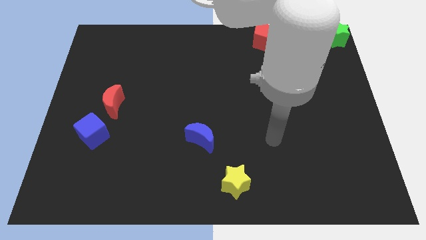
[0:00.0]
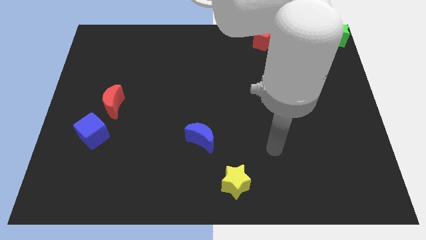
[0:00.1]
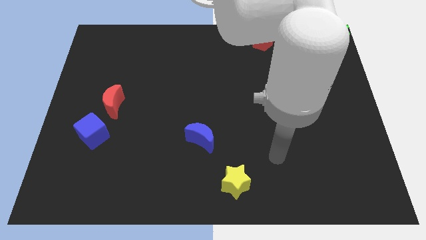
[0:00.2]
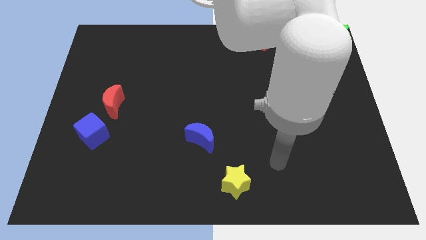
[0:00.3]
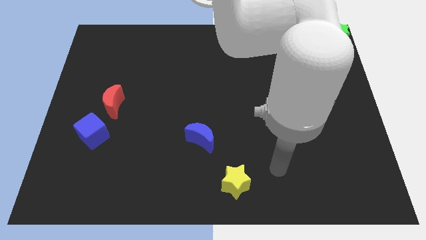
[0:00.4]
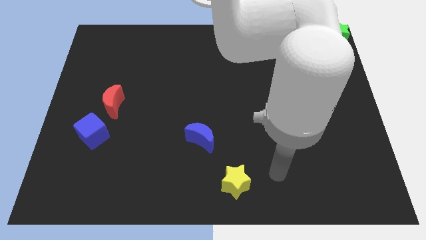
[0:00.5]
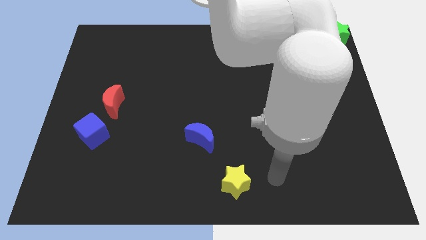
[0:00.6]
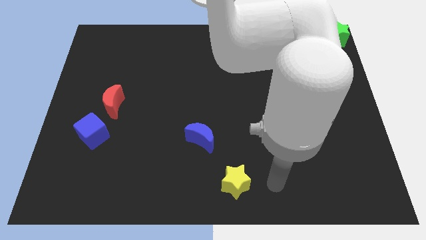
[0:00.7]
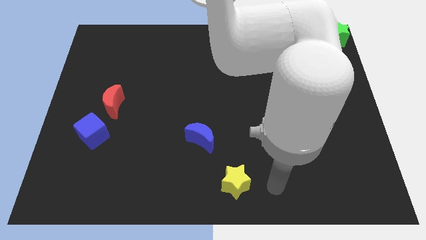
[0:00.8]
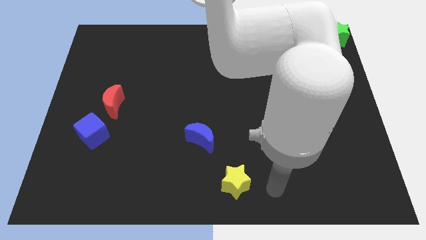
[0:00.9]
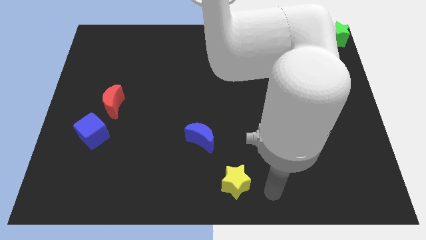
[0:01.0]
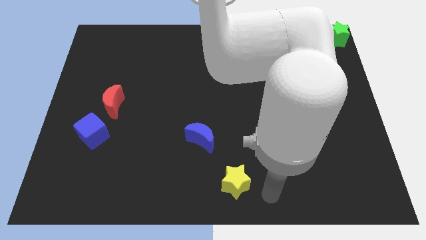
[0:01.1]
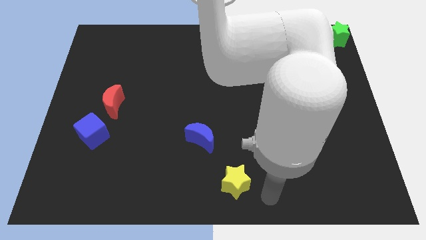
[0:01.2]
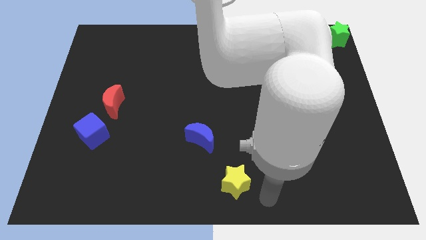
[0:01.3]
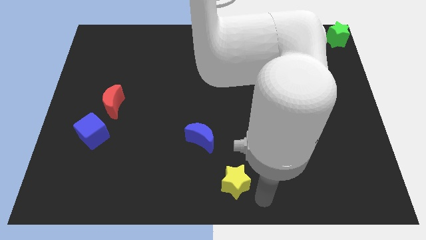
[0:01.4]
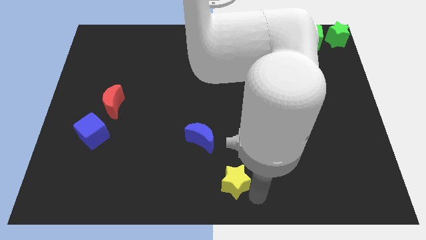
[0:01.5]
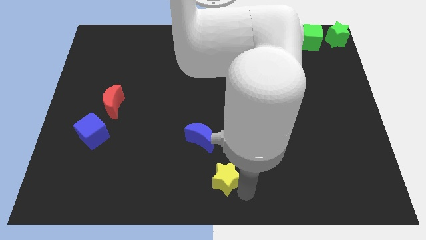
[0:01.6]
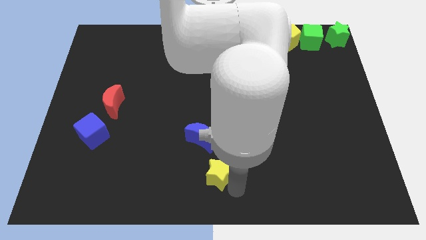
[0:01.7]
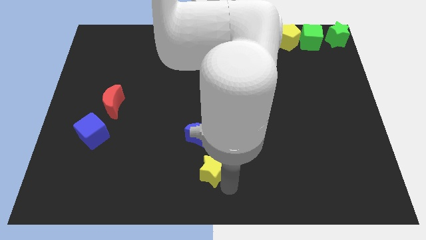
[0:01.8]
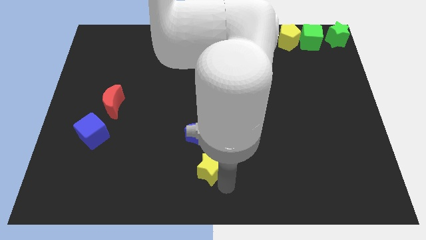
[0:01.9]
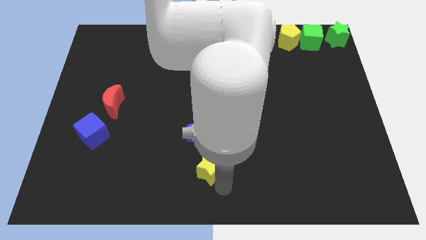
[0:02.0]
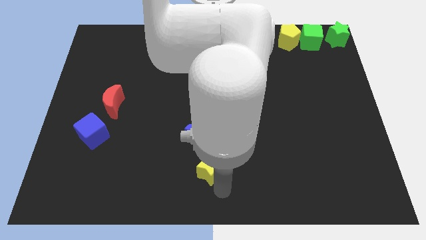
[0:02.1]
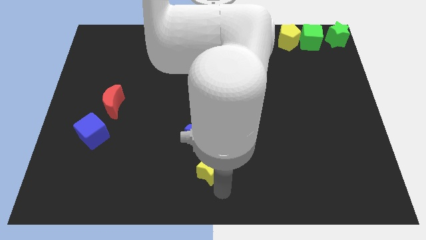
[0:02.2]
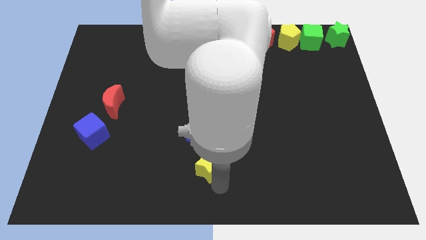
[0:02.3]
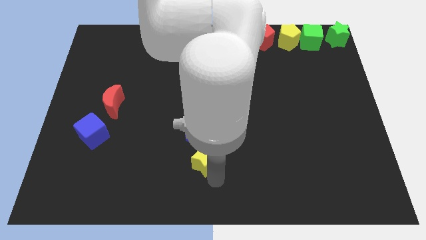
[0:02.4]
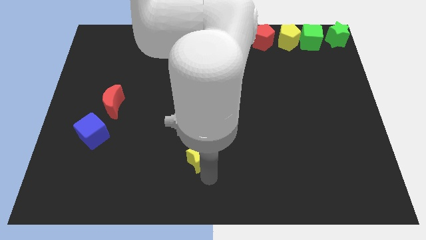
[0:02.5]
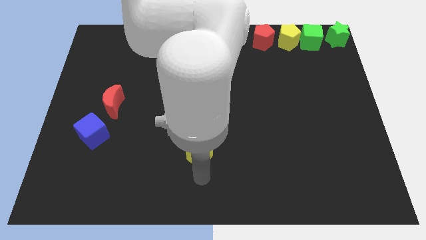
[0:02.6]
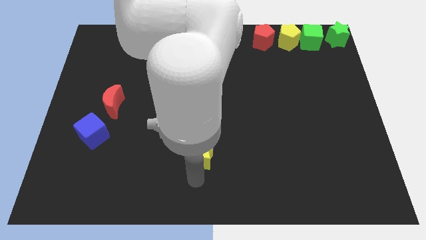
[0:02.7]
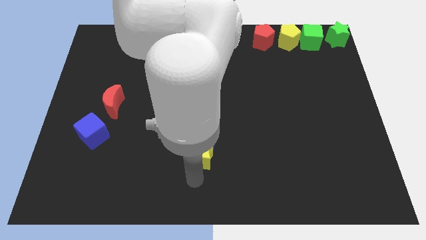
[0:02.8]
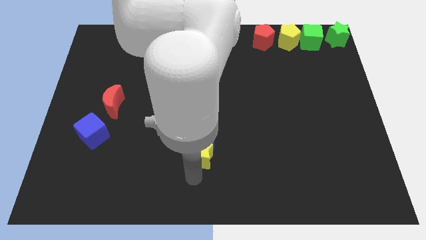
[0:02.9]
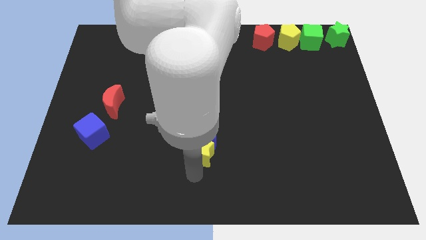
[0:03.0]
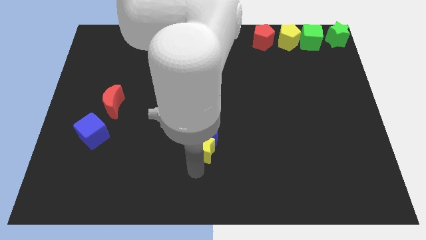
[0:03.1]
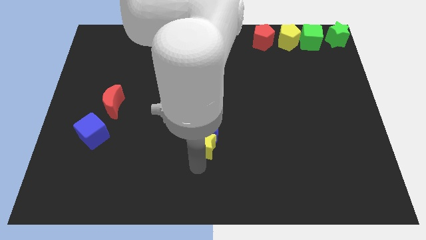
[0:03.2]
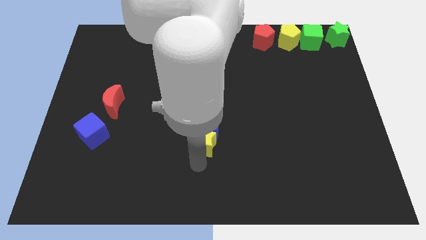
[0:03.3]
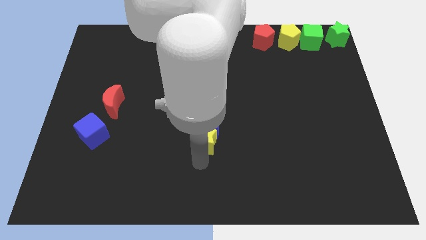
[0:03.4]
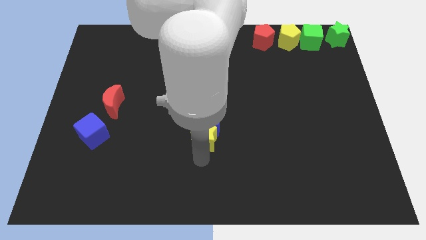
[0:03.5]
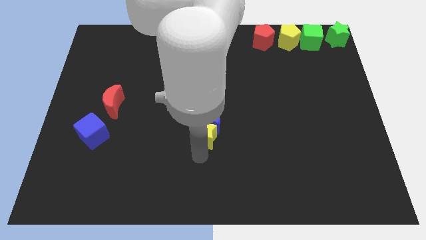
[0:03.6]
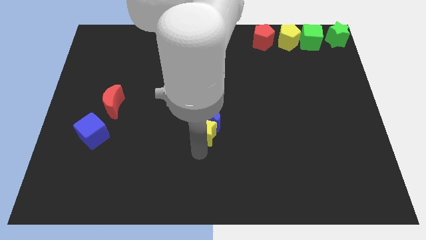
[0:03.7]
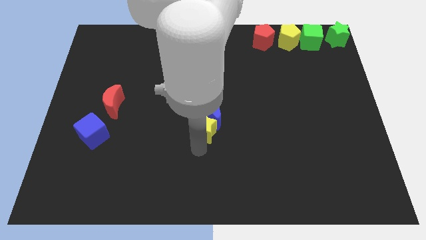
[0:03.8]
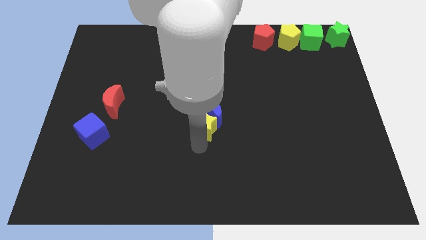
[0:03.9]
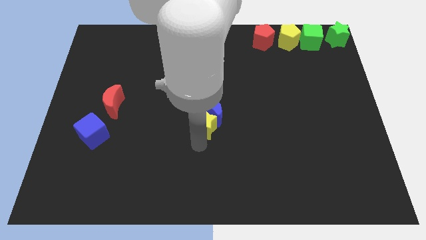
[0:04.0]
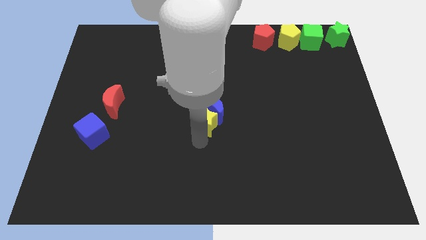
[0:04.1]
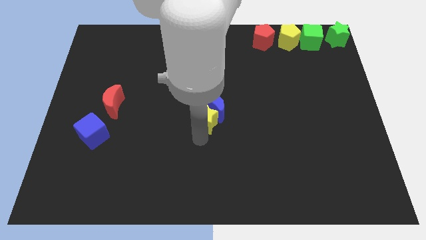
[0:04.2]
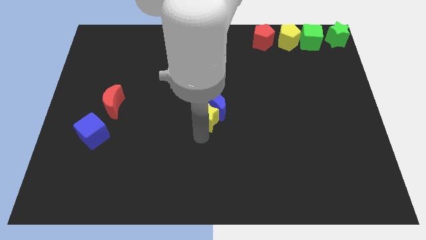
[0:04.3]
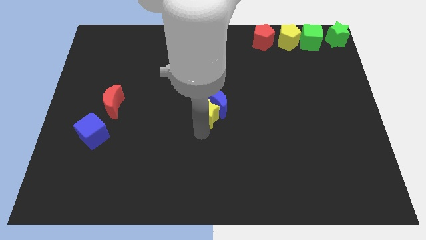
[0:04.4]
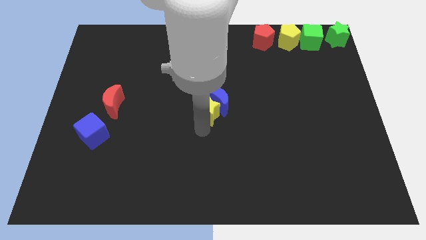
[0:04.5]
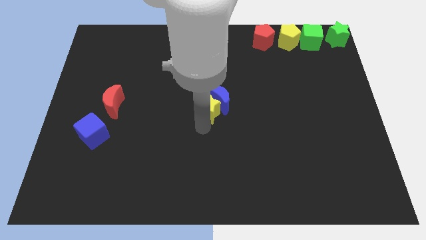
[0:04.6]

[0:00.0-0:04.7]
push the yellow star into the blue crescent

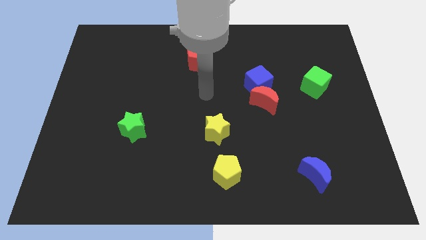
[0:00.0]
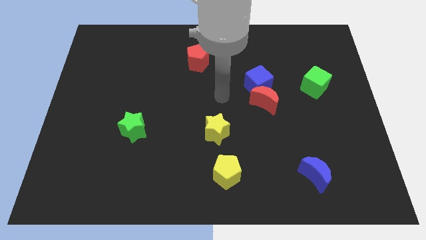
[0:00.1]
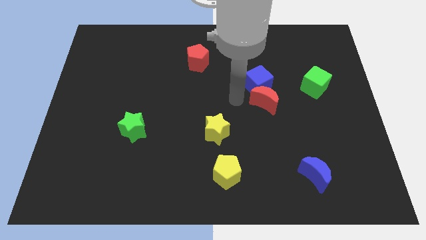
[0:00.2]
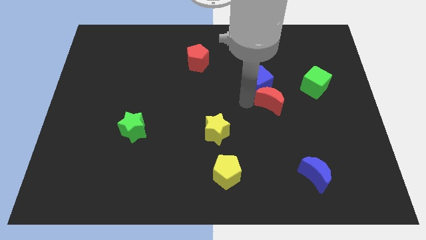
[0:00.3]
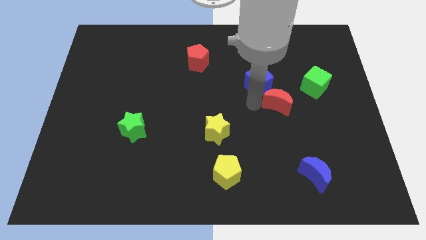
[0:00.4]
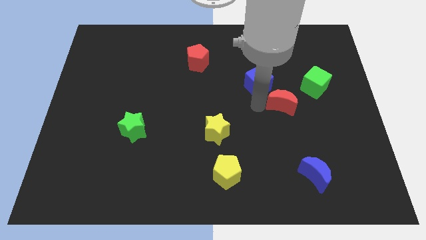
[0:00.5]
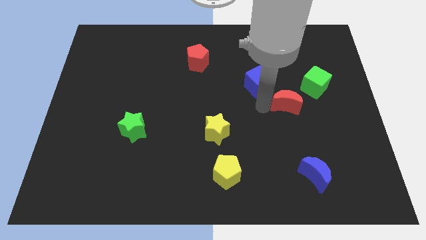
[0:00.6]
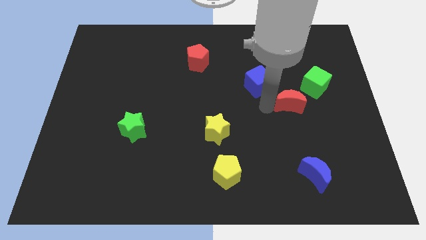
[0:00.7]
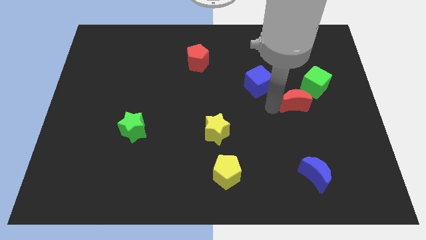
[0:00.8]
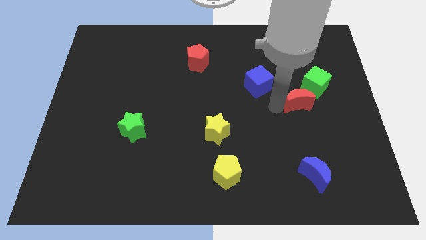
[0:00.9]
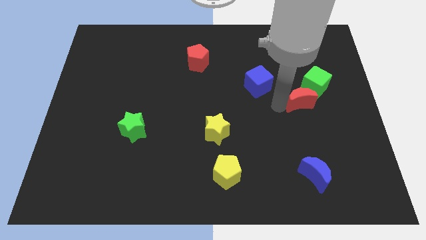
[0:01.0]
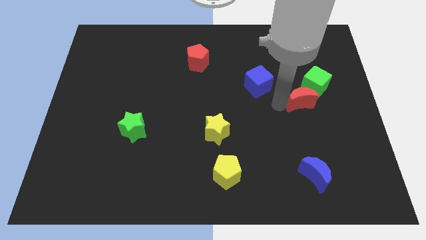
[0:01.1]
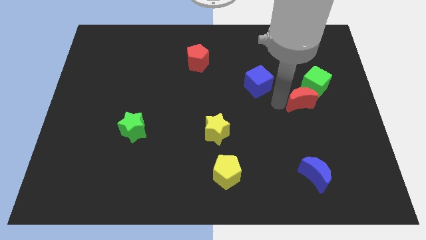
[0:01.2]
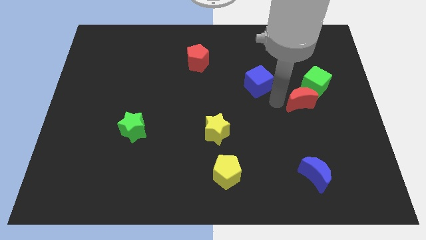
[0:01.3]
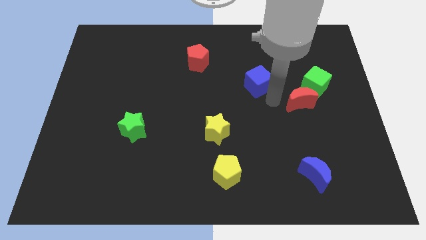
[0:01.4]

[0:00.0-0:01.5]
move the red pentagon to left side of green star

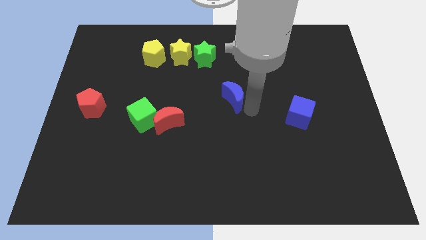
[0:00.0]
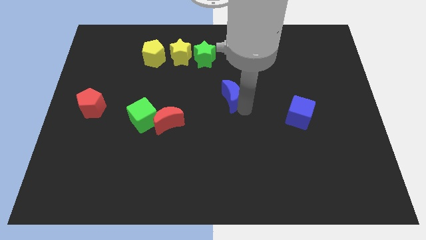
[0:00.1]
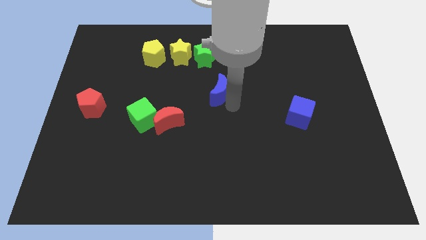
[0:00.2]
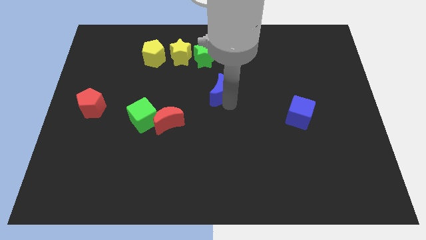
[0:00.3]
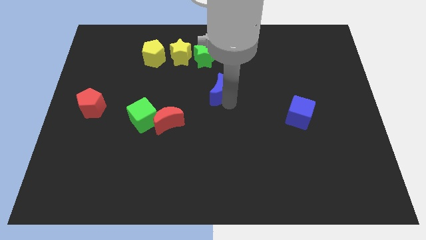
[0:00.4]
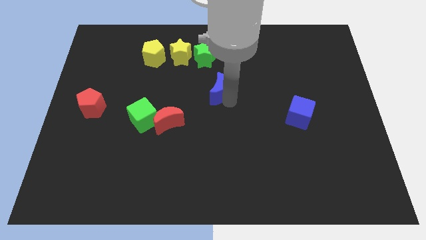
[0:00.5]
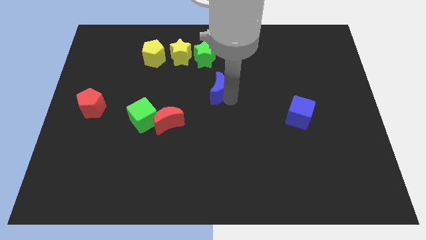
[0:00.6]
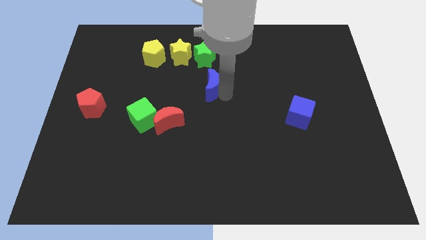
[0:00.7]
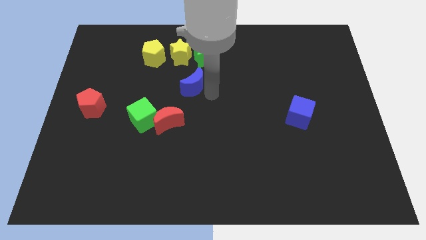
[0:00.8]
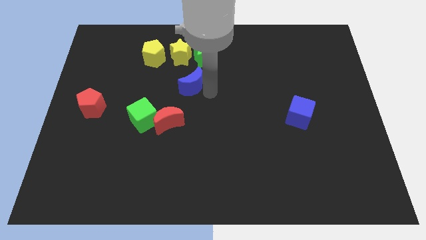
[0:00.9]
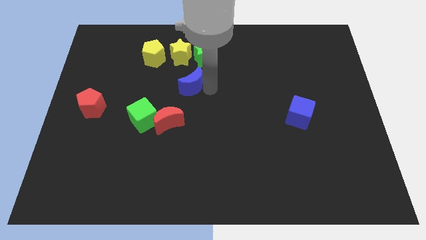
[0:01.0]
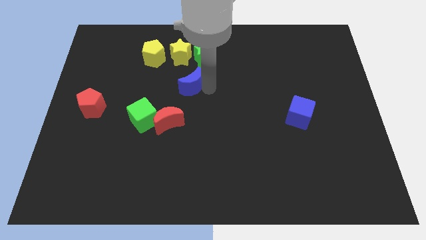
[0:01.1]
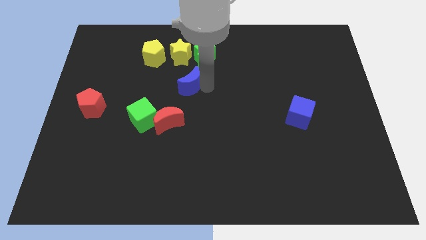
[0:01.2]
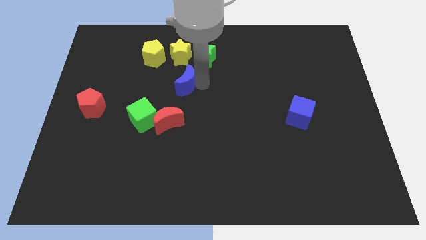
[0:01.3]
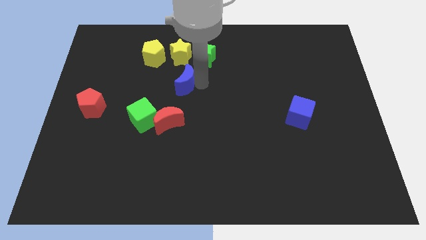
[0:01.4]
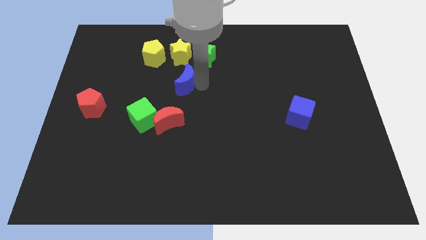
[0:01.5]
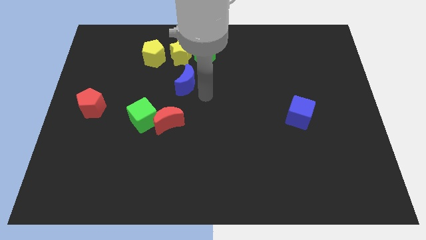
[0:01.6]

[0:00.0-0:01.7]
move the blue crescent below the yellow star

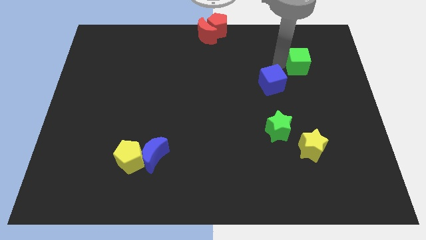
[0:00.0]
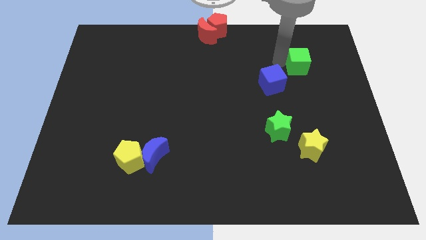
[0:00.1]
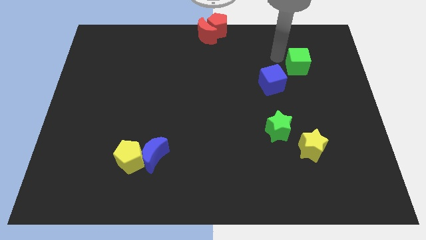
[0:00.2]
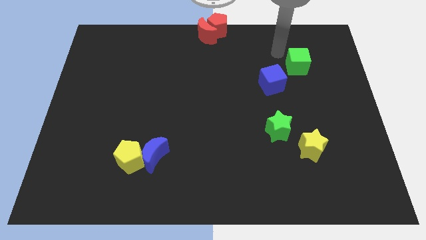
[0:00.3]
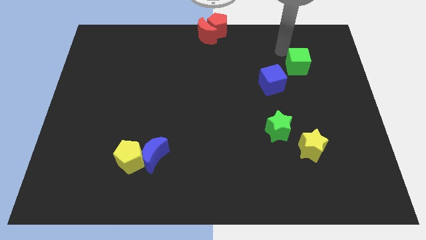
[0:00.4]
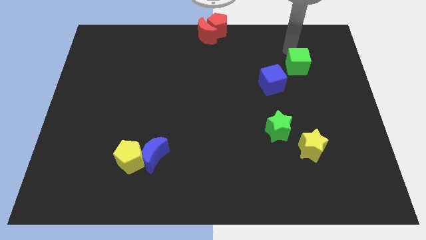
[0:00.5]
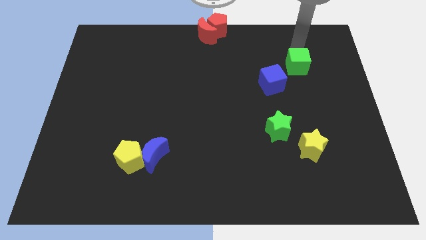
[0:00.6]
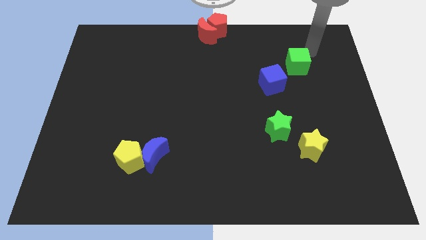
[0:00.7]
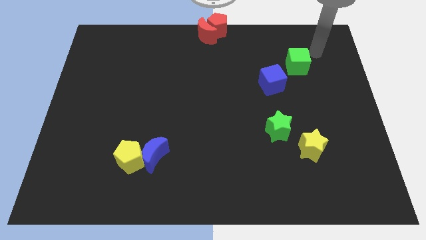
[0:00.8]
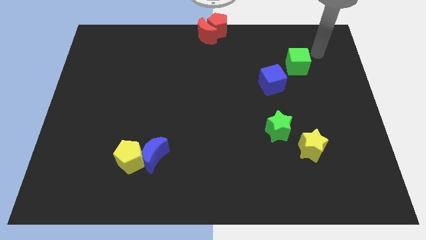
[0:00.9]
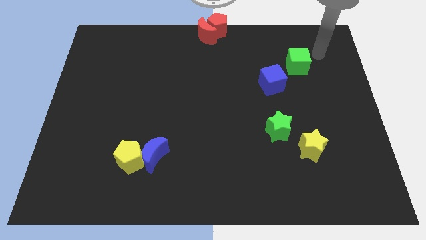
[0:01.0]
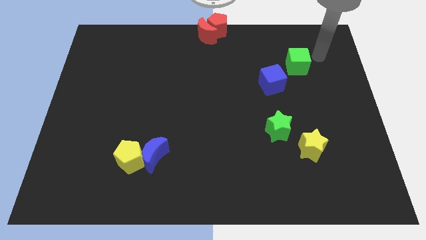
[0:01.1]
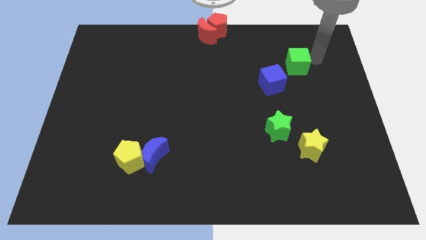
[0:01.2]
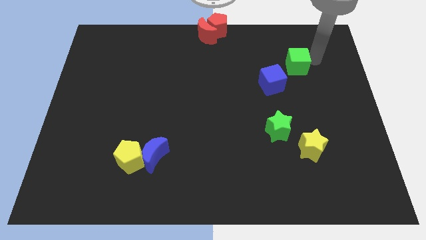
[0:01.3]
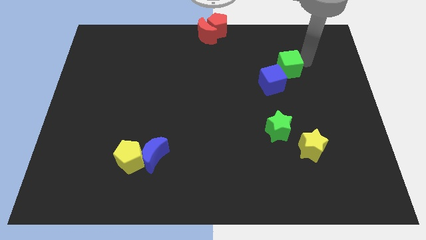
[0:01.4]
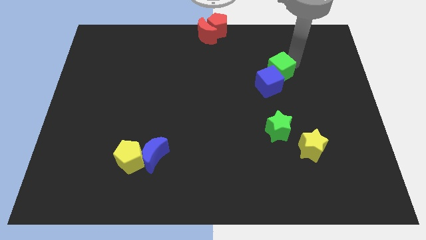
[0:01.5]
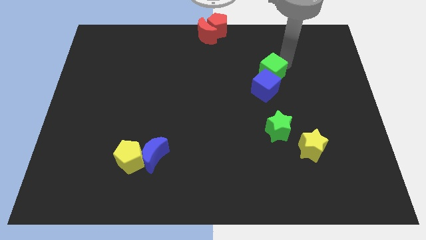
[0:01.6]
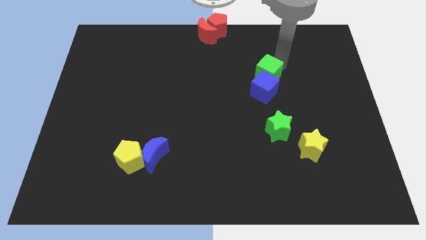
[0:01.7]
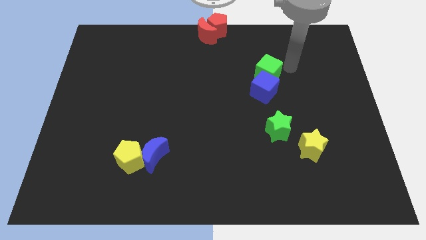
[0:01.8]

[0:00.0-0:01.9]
move the green cube into the blue cube
